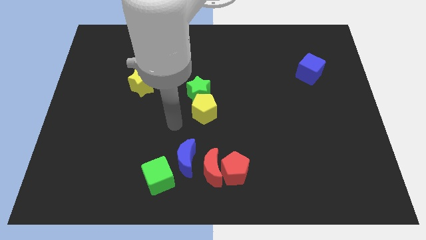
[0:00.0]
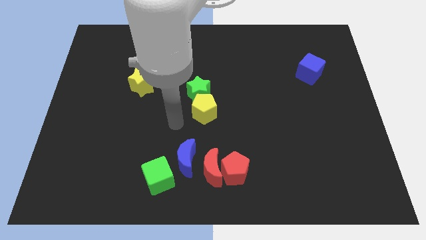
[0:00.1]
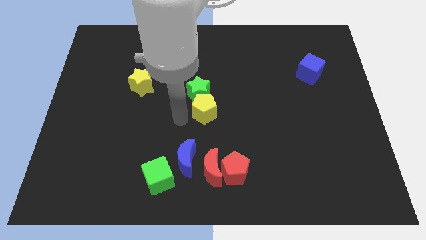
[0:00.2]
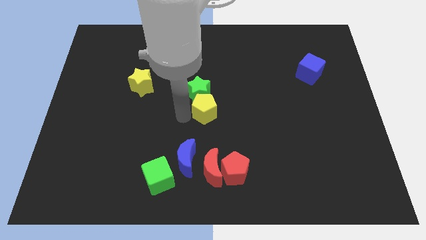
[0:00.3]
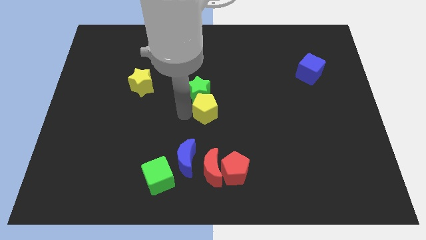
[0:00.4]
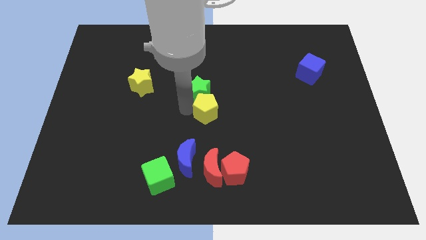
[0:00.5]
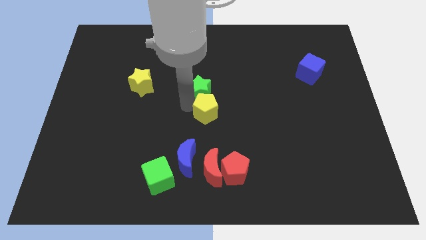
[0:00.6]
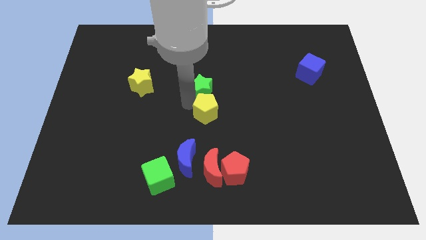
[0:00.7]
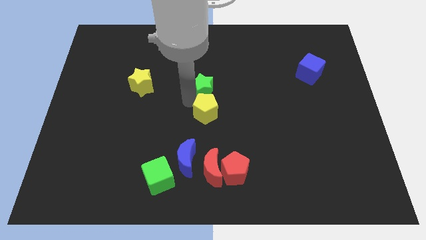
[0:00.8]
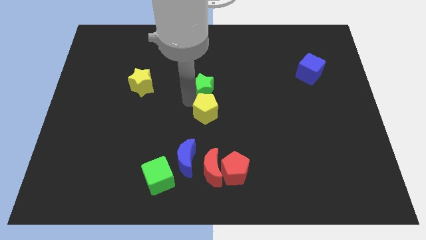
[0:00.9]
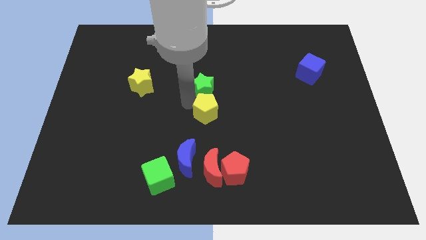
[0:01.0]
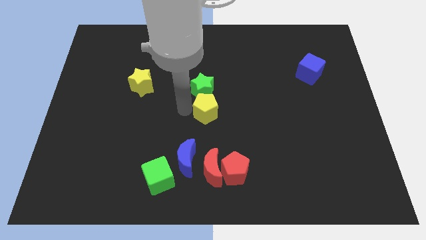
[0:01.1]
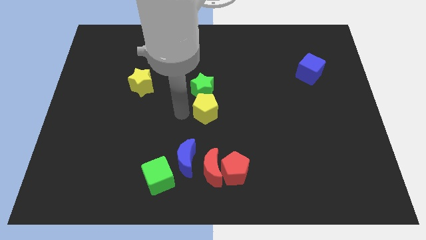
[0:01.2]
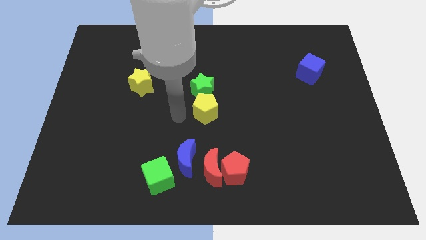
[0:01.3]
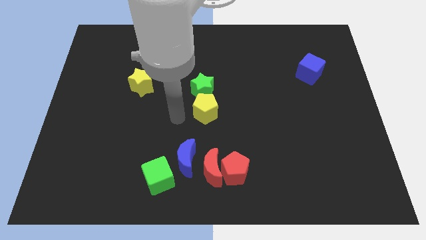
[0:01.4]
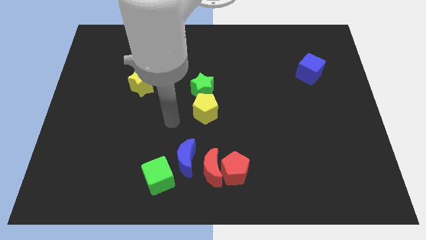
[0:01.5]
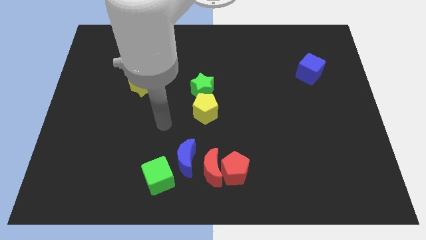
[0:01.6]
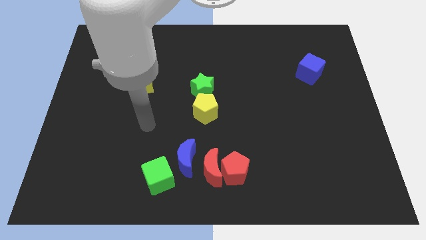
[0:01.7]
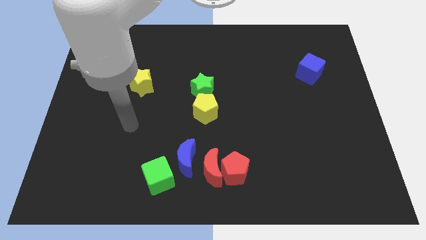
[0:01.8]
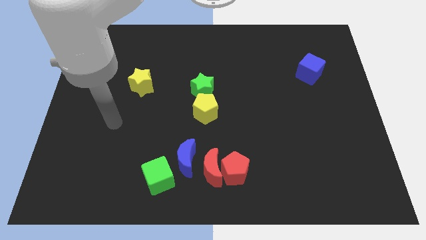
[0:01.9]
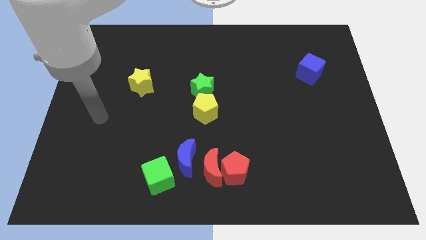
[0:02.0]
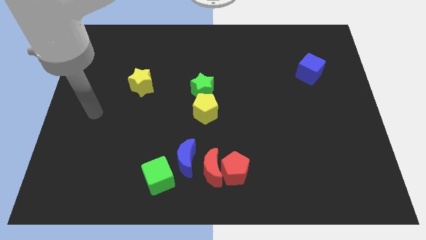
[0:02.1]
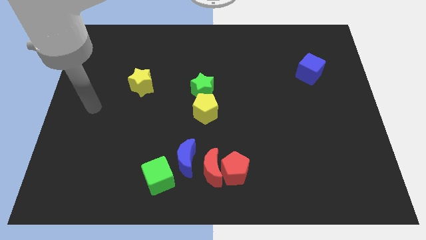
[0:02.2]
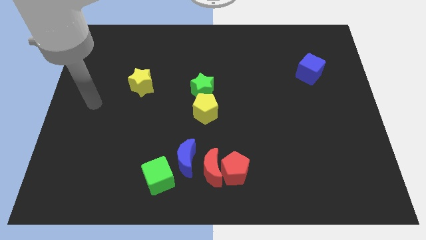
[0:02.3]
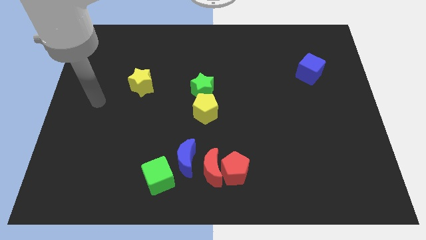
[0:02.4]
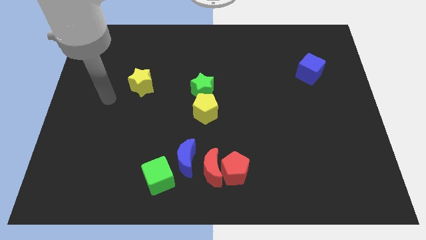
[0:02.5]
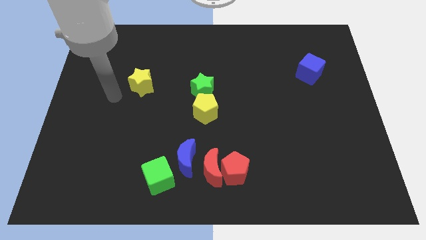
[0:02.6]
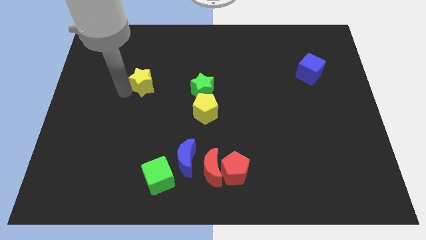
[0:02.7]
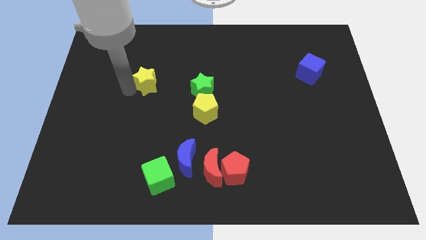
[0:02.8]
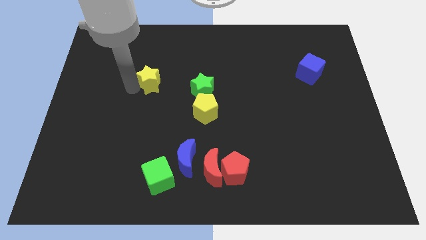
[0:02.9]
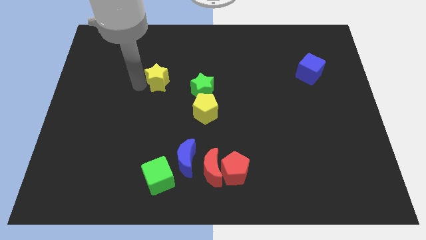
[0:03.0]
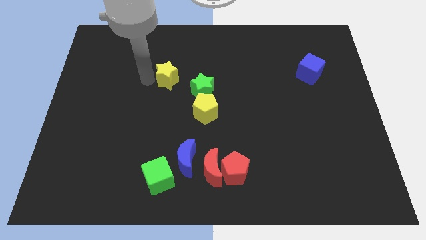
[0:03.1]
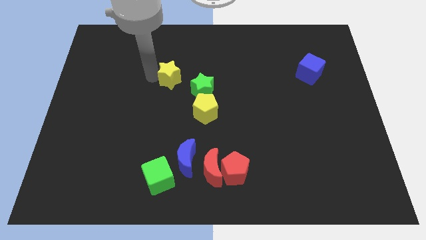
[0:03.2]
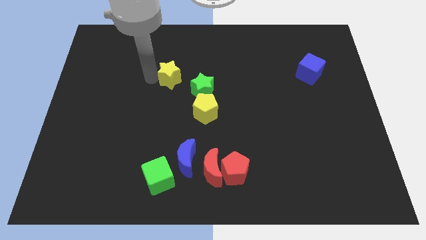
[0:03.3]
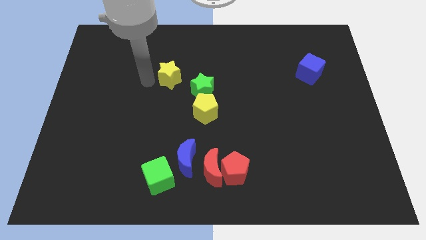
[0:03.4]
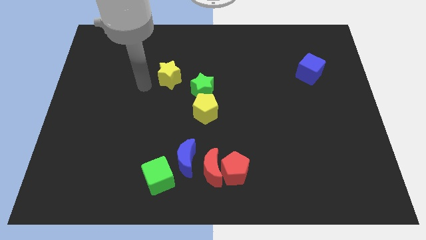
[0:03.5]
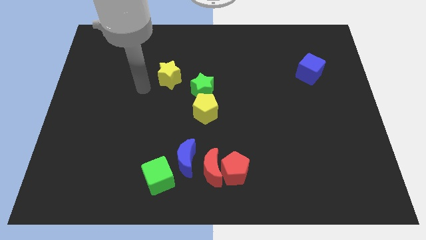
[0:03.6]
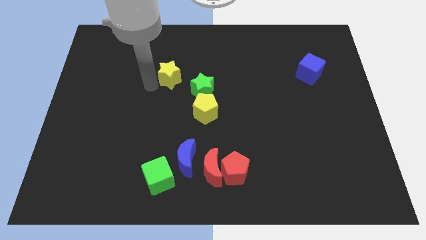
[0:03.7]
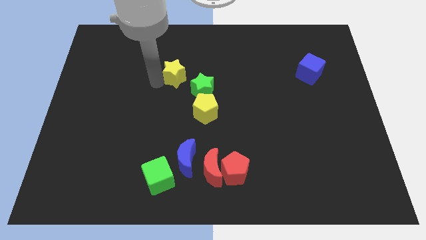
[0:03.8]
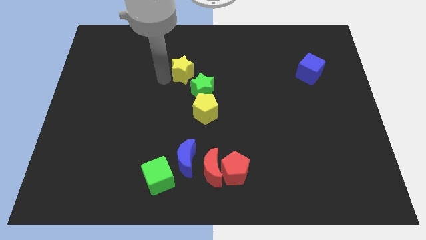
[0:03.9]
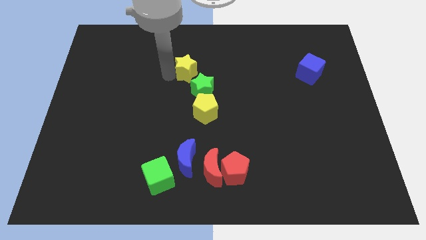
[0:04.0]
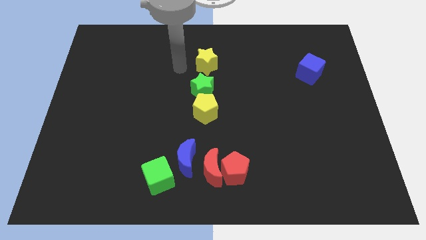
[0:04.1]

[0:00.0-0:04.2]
adjust yellow blocks and the green star to form a vertical line

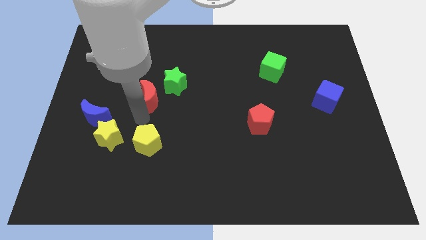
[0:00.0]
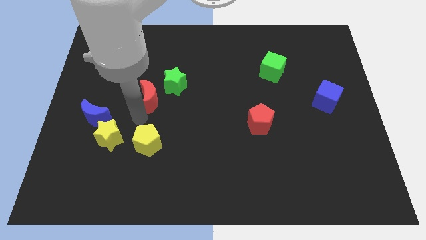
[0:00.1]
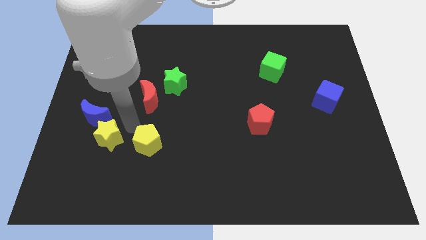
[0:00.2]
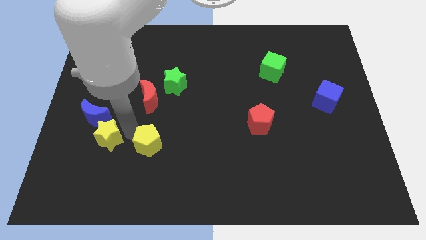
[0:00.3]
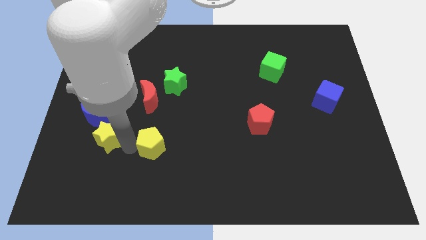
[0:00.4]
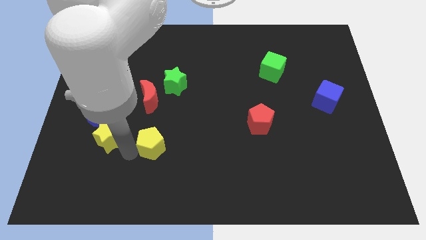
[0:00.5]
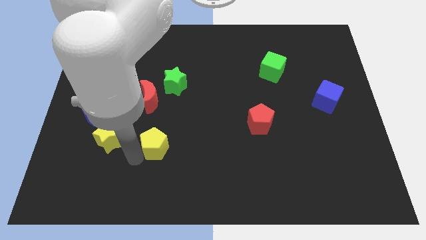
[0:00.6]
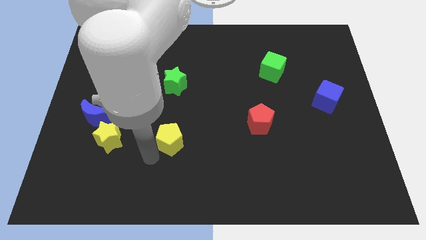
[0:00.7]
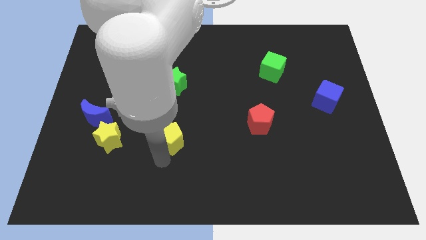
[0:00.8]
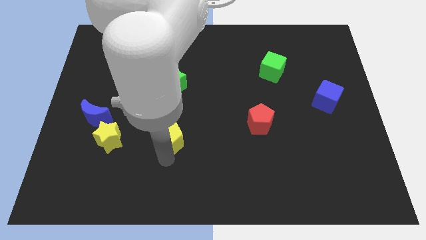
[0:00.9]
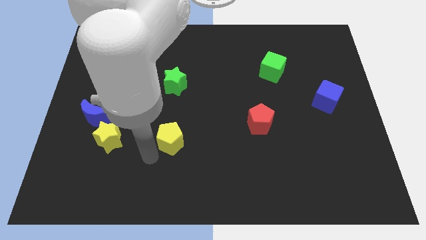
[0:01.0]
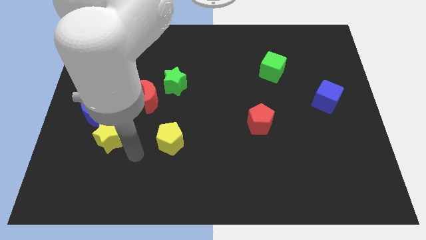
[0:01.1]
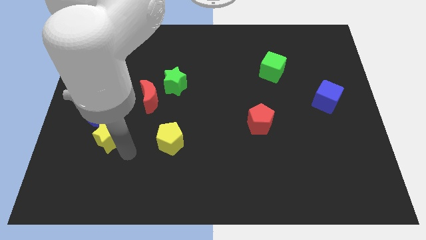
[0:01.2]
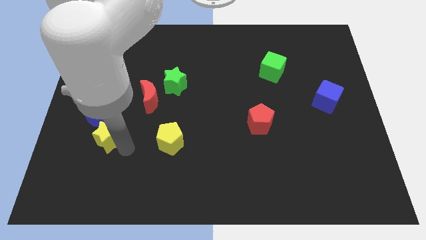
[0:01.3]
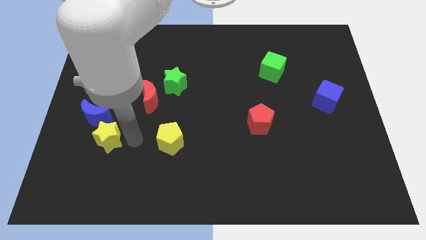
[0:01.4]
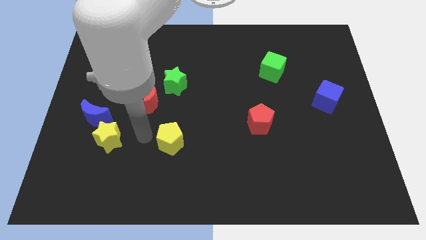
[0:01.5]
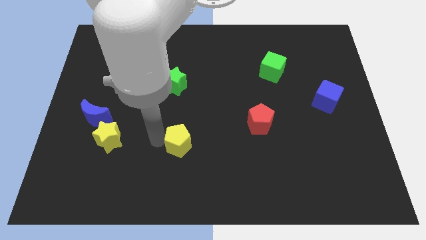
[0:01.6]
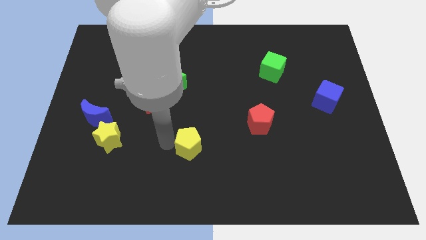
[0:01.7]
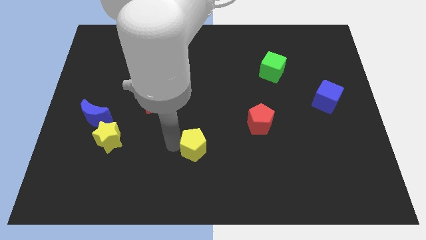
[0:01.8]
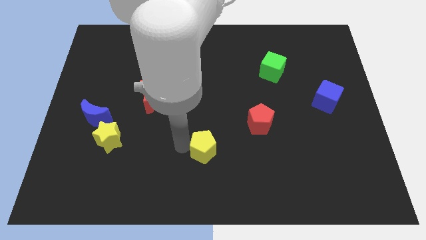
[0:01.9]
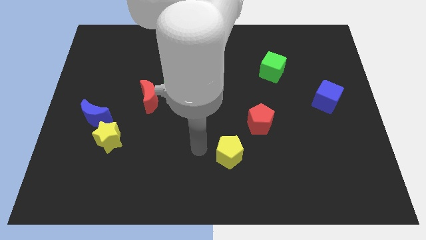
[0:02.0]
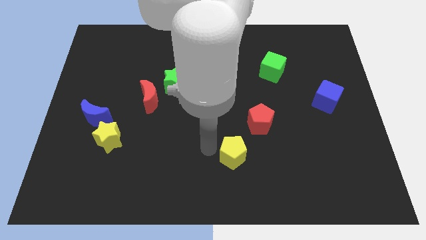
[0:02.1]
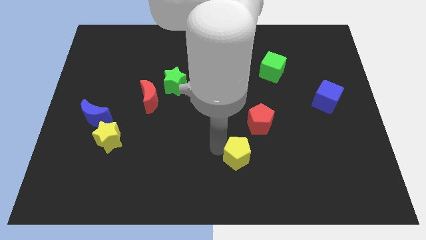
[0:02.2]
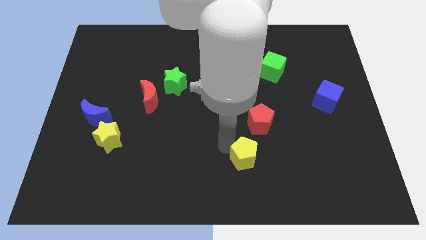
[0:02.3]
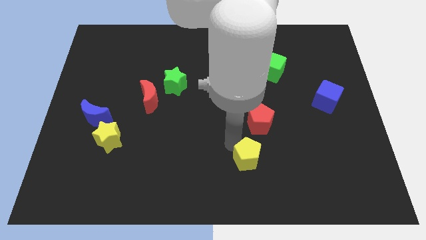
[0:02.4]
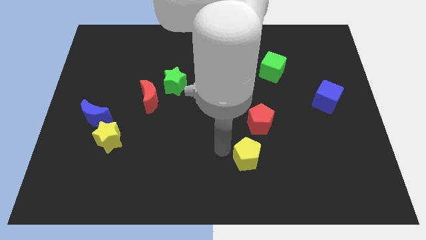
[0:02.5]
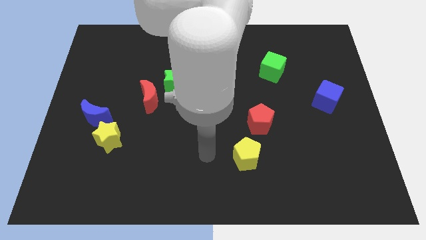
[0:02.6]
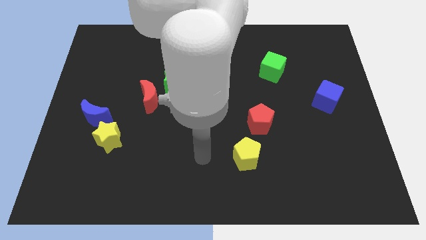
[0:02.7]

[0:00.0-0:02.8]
move the yellow pentagon to the bottom center of the board

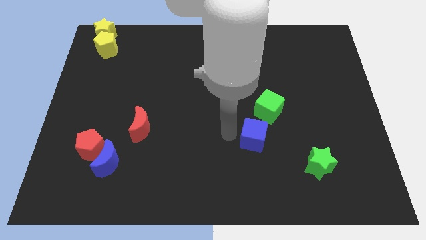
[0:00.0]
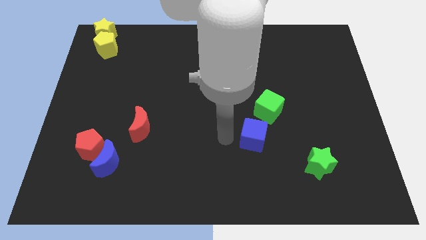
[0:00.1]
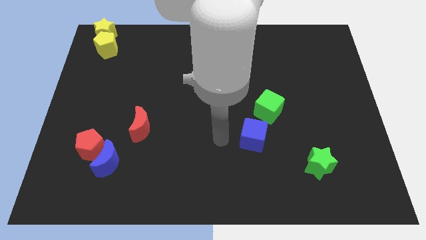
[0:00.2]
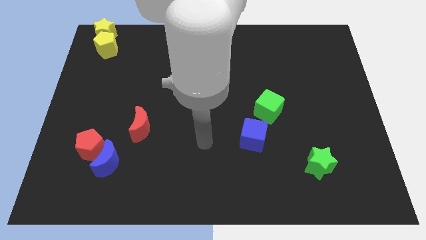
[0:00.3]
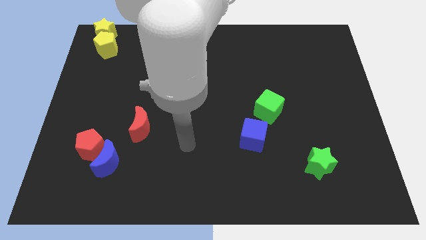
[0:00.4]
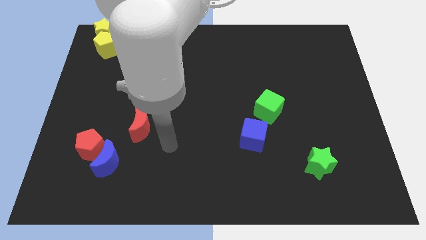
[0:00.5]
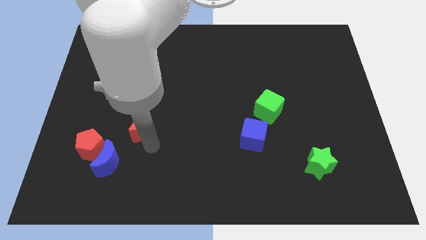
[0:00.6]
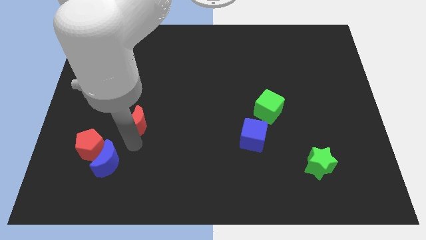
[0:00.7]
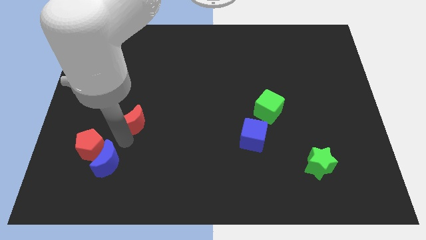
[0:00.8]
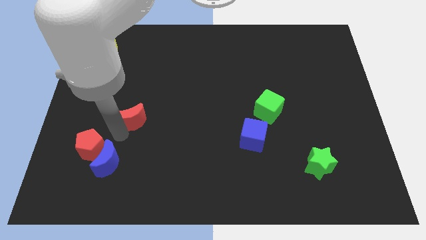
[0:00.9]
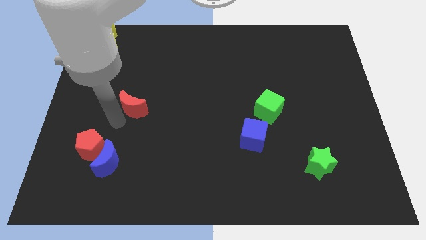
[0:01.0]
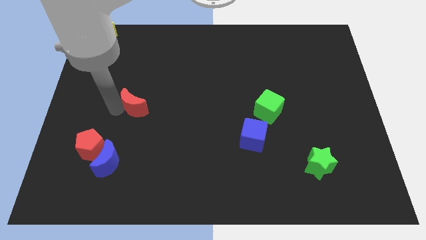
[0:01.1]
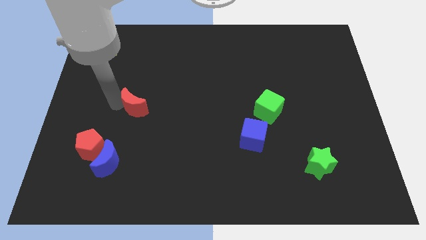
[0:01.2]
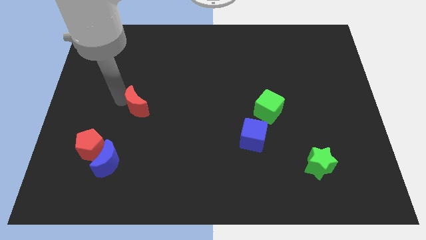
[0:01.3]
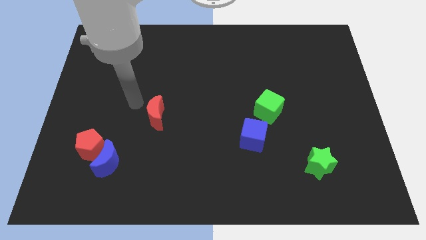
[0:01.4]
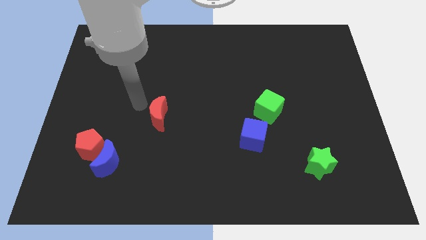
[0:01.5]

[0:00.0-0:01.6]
place the red moon to the left of the blue cube

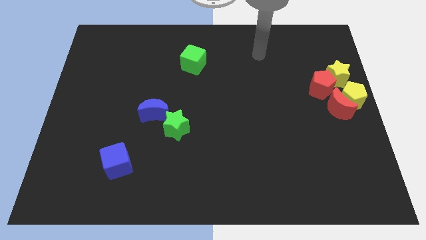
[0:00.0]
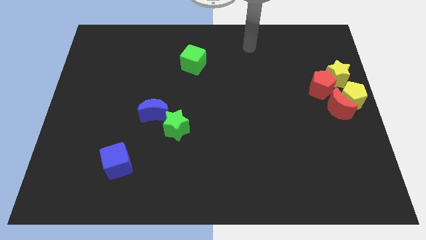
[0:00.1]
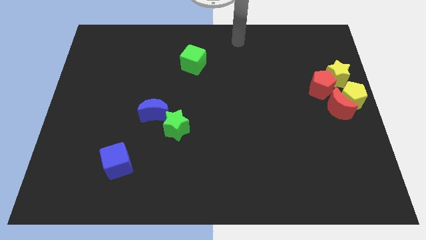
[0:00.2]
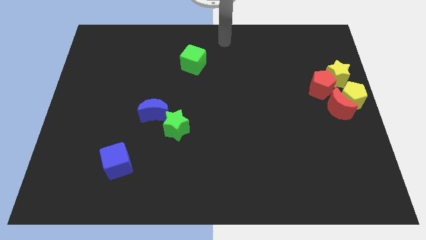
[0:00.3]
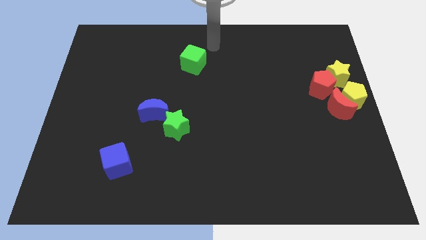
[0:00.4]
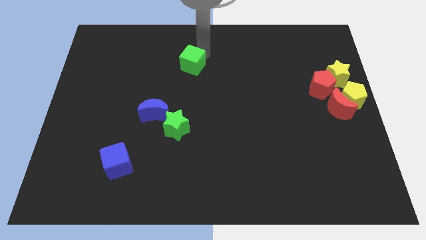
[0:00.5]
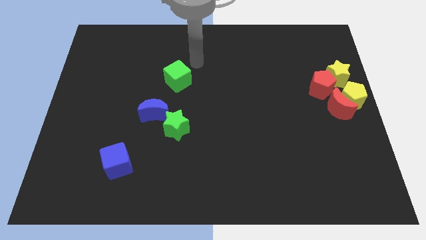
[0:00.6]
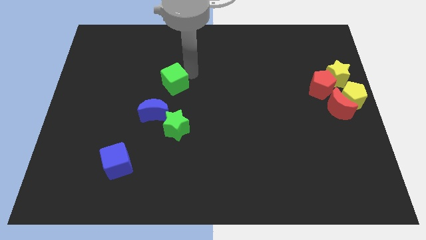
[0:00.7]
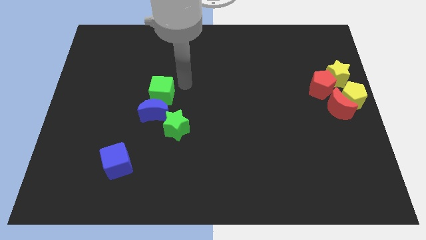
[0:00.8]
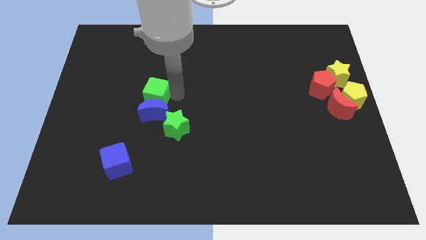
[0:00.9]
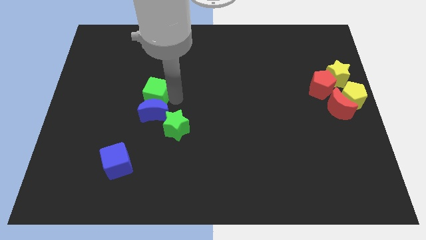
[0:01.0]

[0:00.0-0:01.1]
place the green cube on the top of the blue moon
